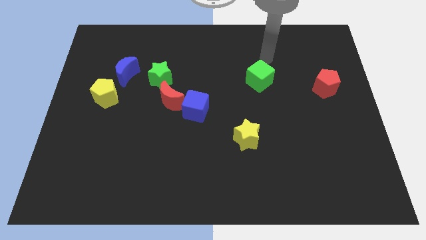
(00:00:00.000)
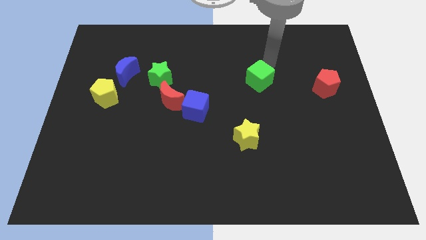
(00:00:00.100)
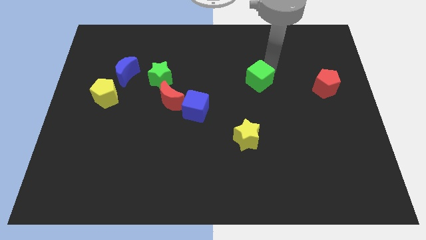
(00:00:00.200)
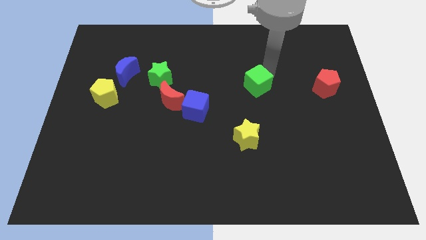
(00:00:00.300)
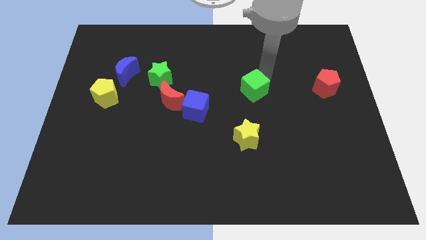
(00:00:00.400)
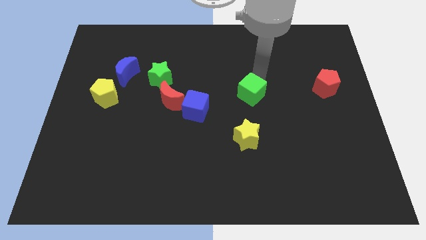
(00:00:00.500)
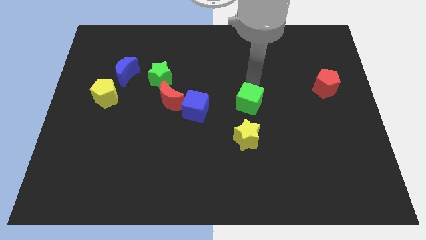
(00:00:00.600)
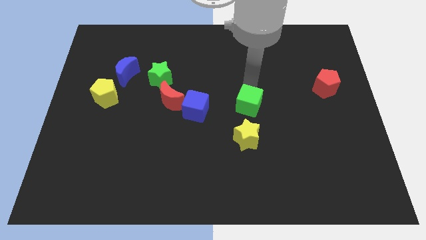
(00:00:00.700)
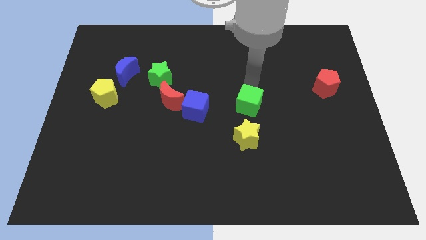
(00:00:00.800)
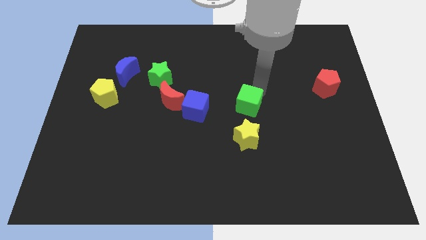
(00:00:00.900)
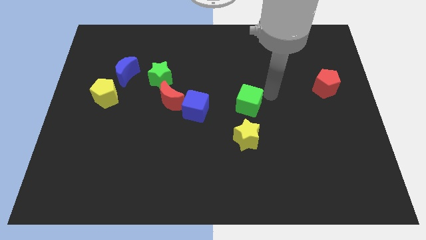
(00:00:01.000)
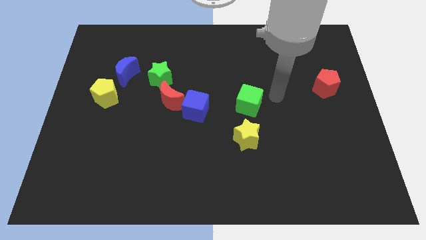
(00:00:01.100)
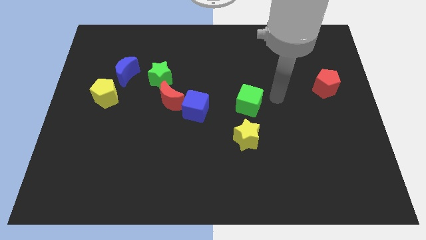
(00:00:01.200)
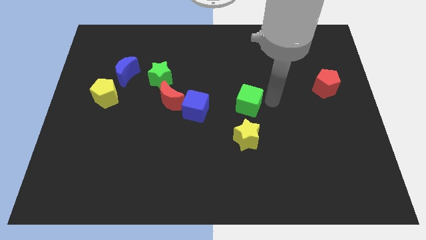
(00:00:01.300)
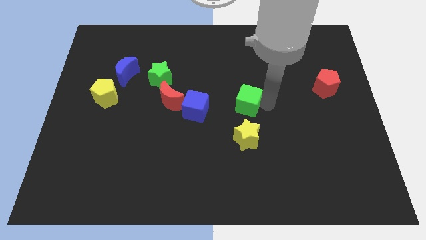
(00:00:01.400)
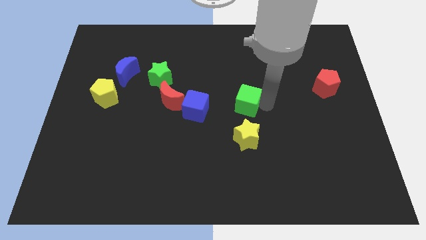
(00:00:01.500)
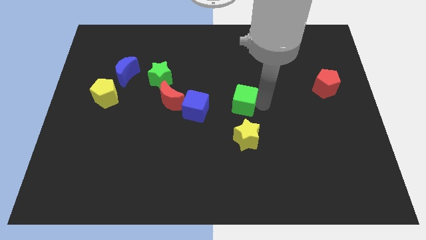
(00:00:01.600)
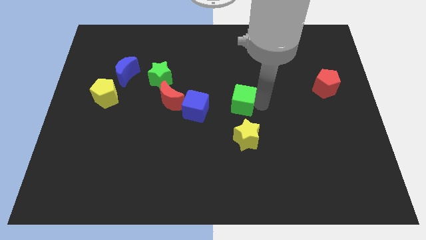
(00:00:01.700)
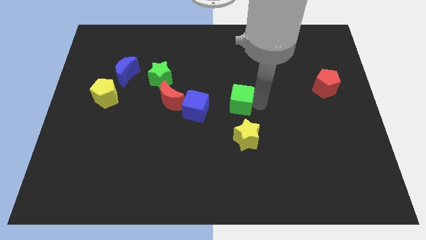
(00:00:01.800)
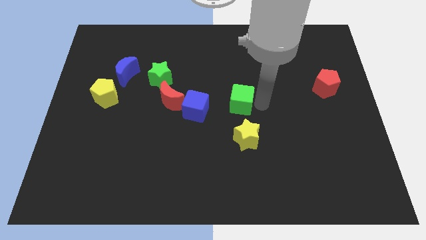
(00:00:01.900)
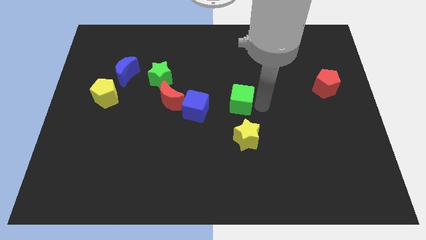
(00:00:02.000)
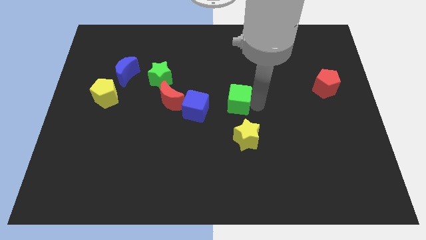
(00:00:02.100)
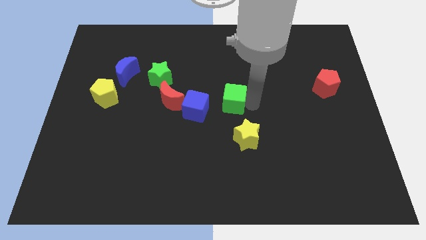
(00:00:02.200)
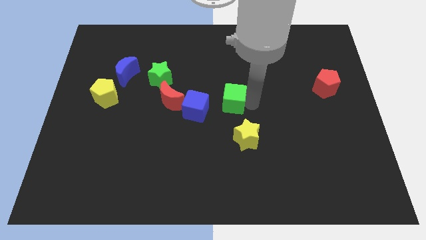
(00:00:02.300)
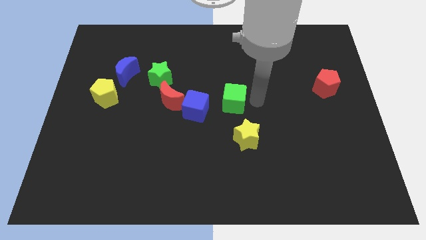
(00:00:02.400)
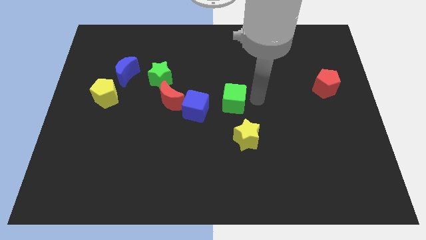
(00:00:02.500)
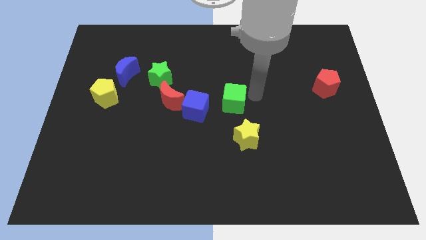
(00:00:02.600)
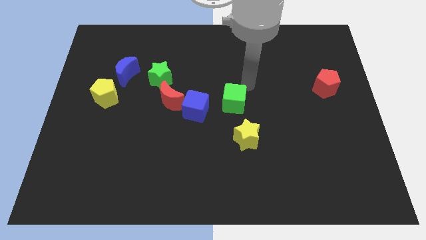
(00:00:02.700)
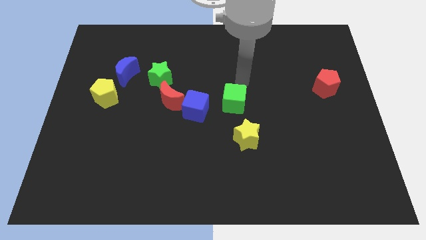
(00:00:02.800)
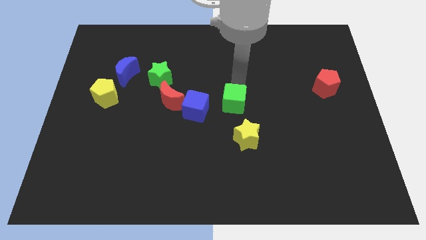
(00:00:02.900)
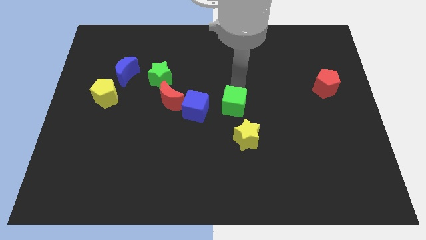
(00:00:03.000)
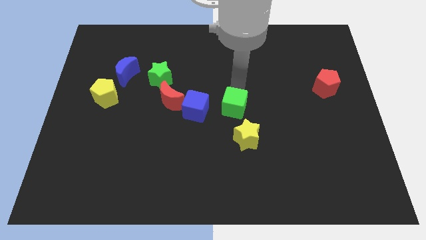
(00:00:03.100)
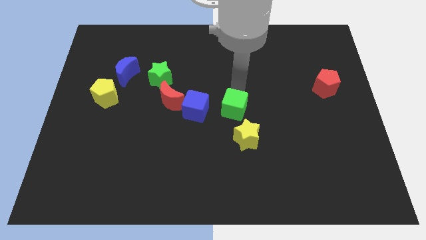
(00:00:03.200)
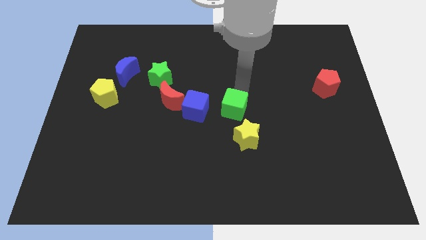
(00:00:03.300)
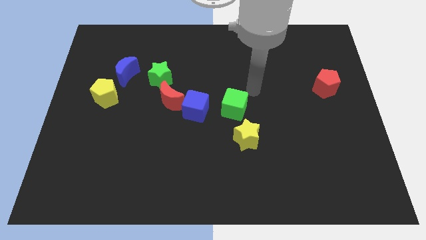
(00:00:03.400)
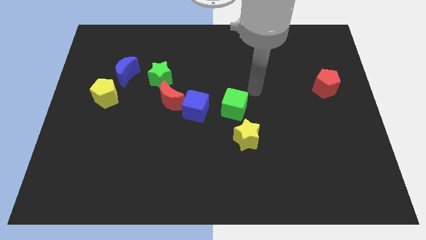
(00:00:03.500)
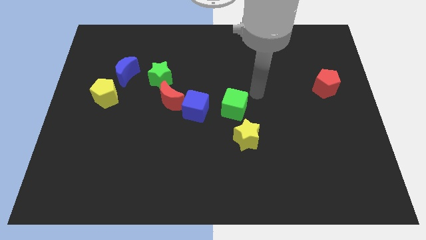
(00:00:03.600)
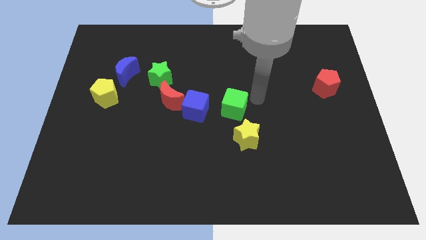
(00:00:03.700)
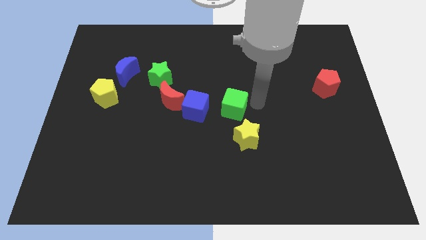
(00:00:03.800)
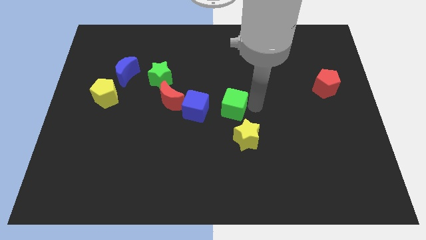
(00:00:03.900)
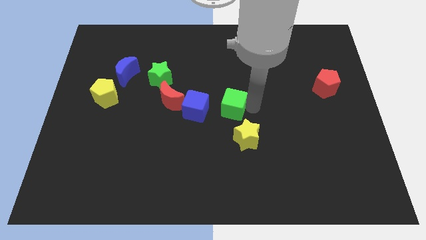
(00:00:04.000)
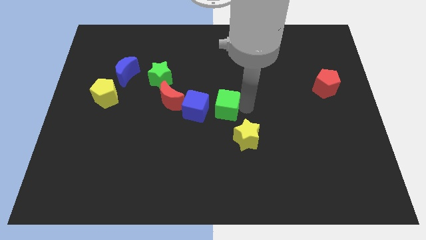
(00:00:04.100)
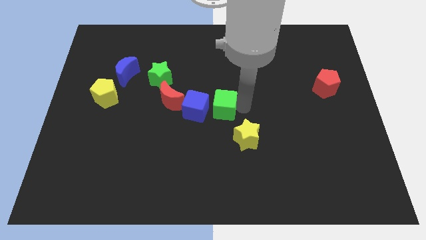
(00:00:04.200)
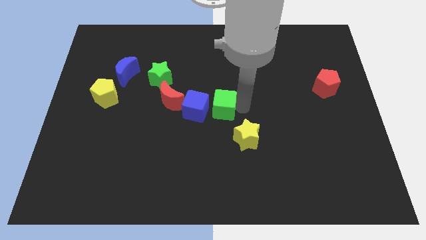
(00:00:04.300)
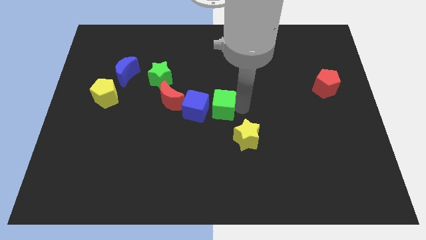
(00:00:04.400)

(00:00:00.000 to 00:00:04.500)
place the green cube towards the top right side of the blue cube

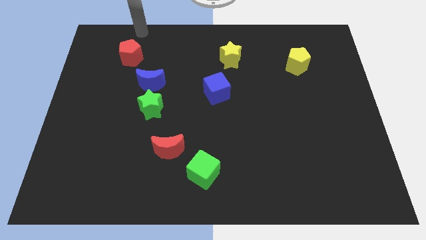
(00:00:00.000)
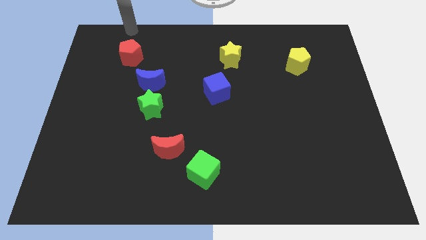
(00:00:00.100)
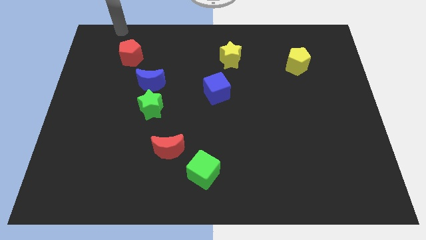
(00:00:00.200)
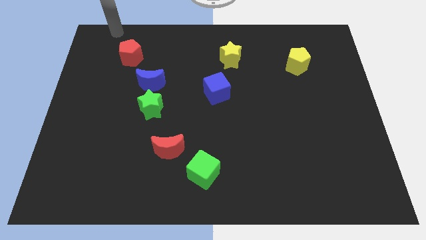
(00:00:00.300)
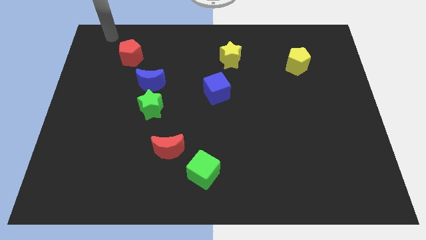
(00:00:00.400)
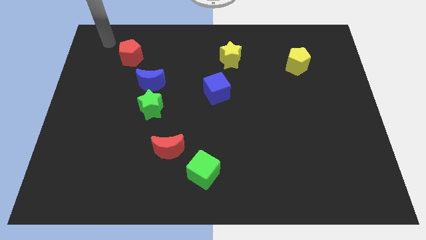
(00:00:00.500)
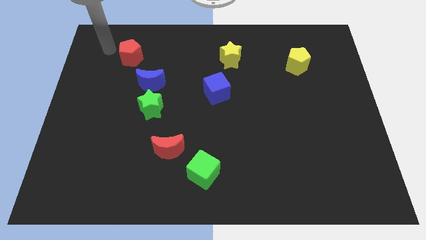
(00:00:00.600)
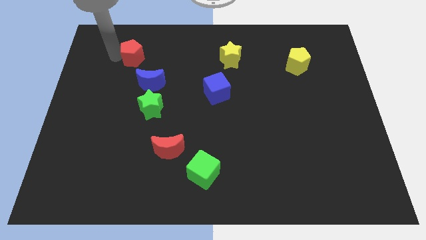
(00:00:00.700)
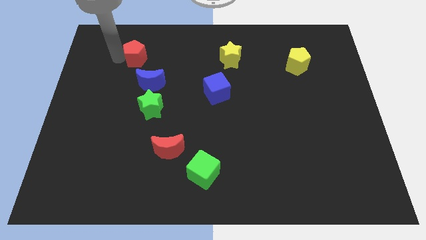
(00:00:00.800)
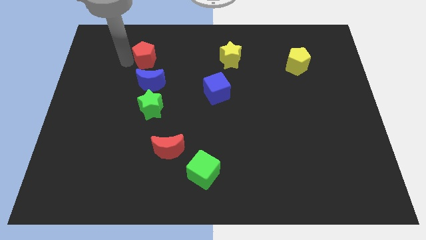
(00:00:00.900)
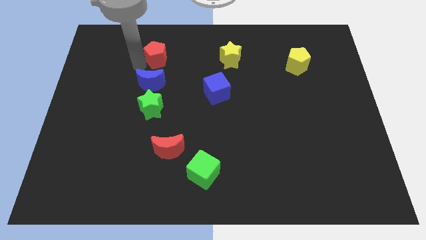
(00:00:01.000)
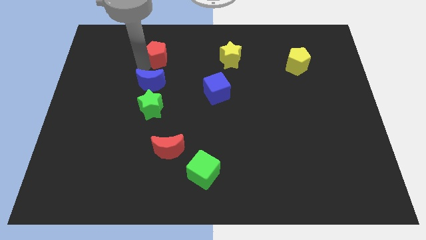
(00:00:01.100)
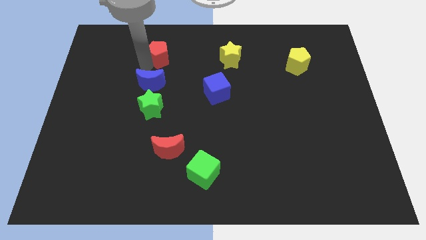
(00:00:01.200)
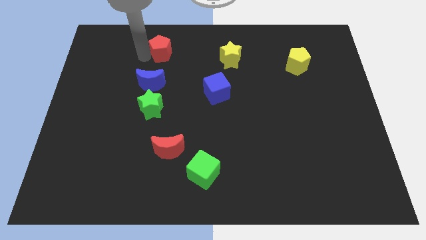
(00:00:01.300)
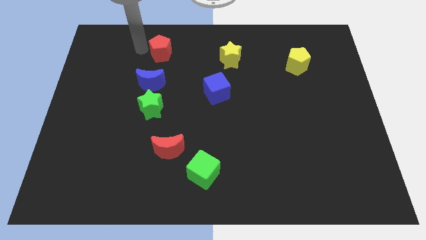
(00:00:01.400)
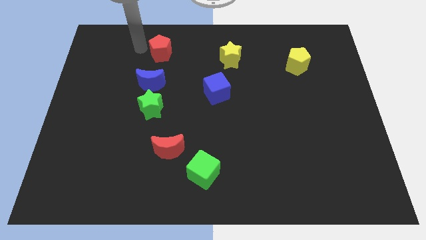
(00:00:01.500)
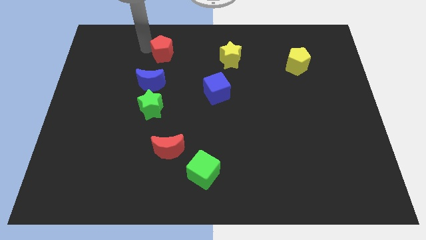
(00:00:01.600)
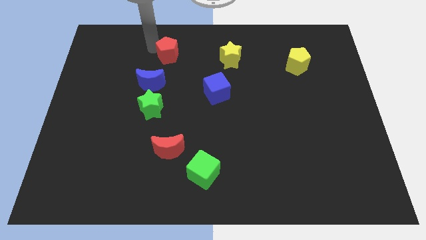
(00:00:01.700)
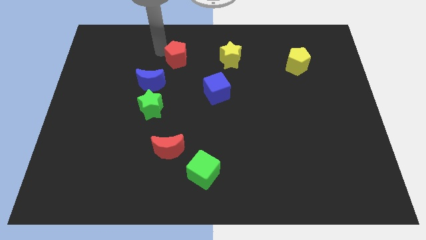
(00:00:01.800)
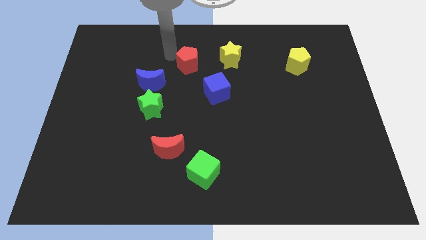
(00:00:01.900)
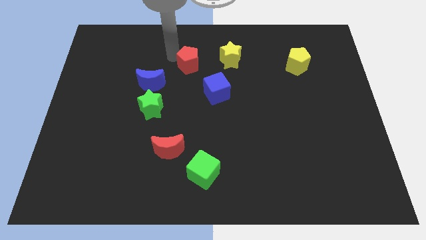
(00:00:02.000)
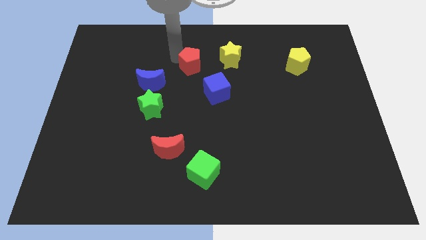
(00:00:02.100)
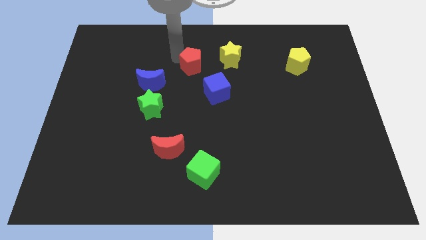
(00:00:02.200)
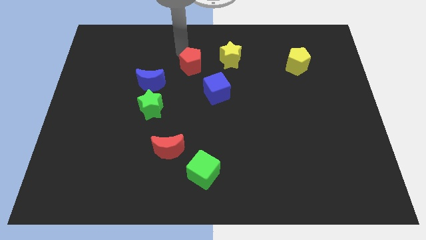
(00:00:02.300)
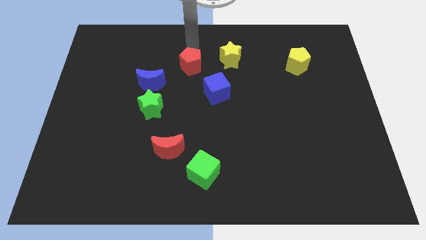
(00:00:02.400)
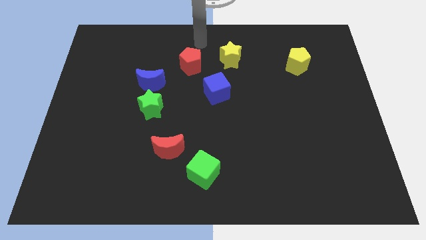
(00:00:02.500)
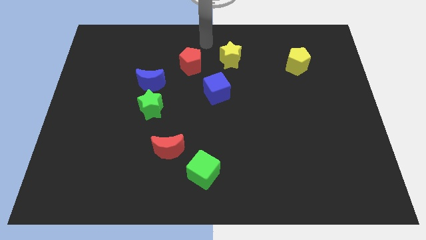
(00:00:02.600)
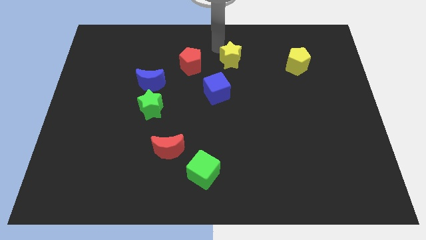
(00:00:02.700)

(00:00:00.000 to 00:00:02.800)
place the red pentagon diagonally top right to the blue moon

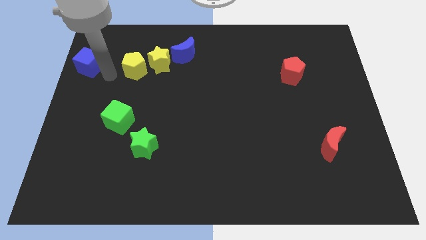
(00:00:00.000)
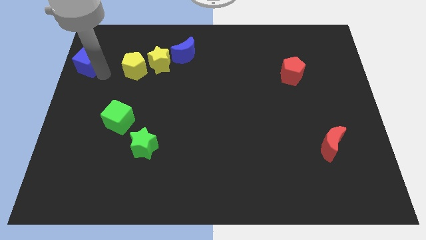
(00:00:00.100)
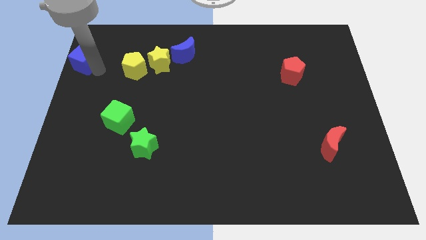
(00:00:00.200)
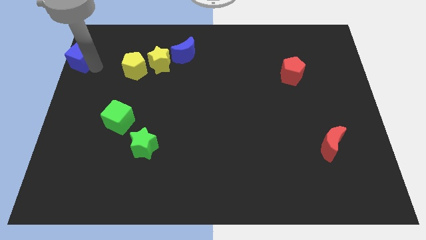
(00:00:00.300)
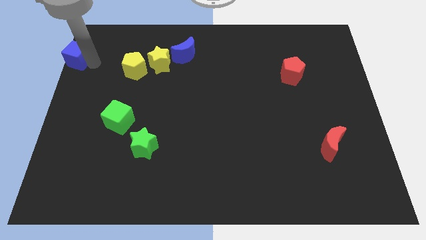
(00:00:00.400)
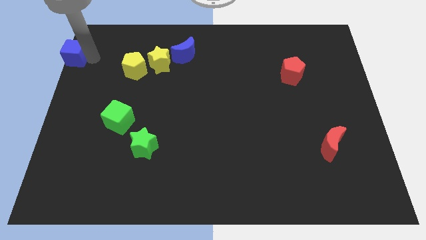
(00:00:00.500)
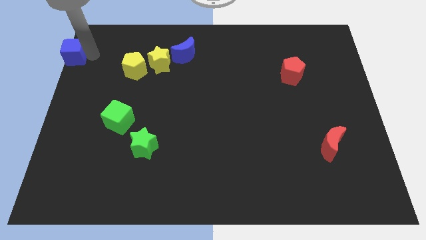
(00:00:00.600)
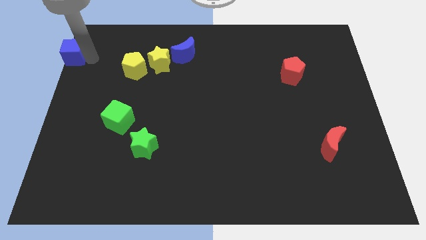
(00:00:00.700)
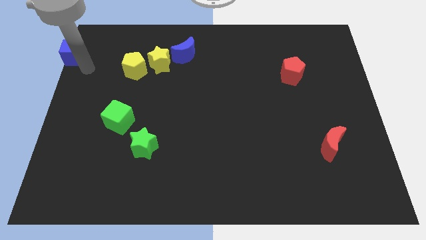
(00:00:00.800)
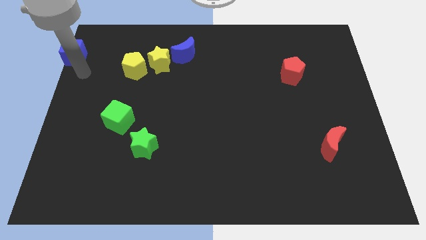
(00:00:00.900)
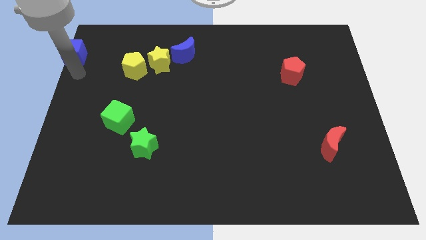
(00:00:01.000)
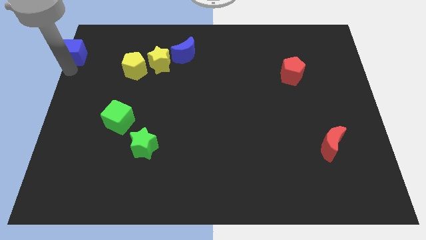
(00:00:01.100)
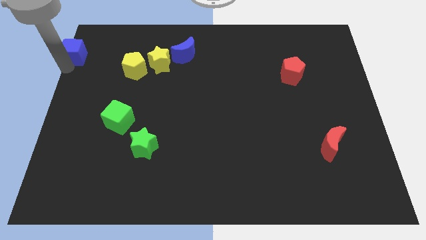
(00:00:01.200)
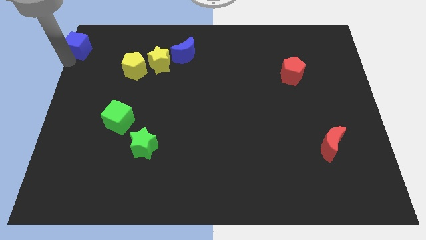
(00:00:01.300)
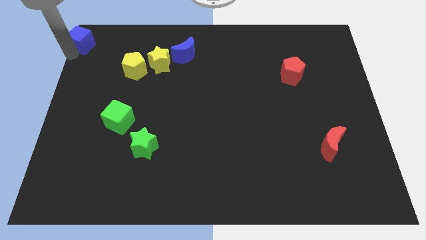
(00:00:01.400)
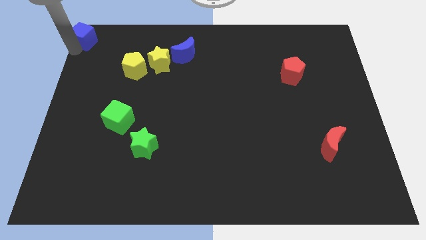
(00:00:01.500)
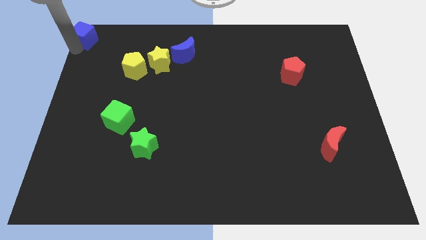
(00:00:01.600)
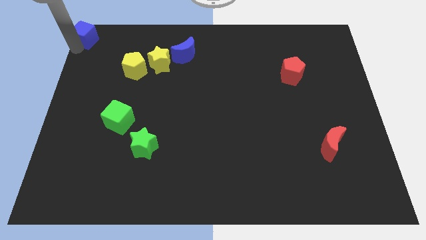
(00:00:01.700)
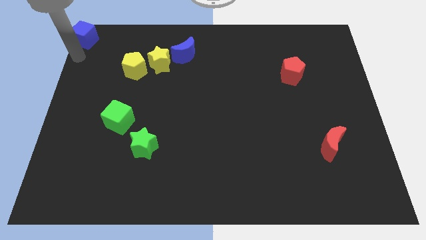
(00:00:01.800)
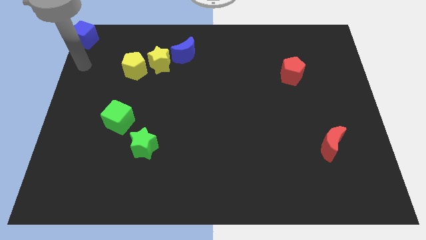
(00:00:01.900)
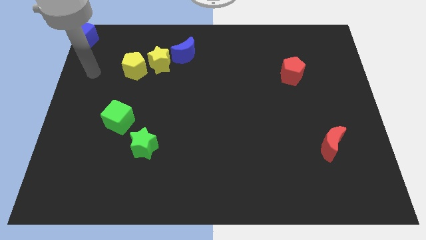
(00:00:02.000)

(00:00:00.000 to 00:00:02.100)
push the blue cube into the top left corner
